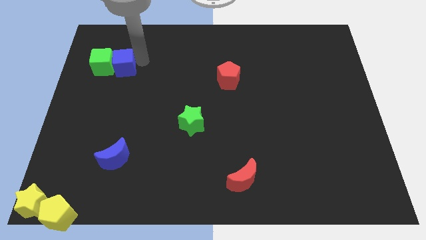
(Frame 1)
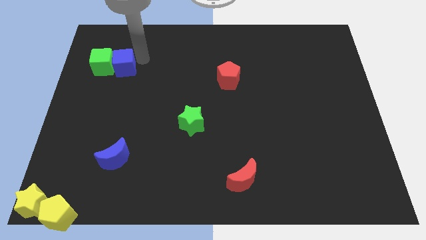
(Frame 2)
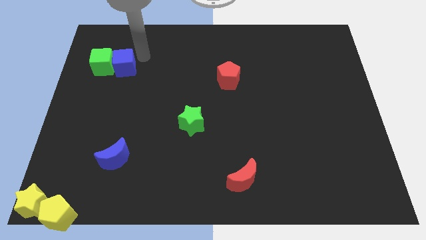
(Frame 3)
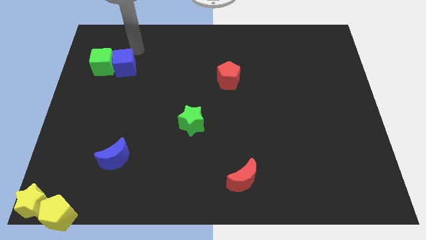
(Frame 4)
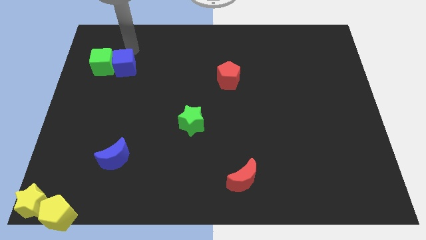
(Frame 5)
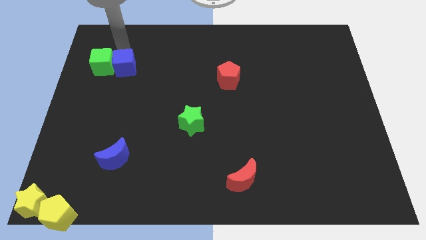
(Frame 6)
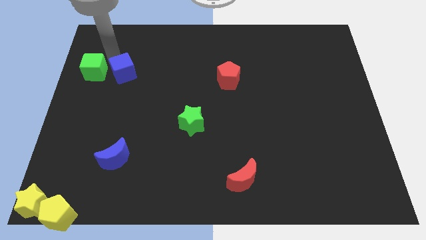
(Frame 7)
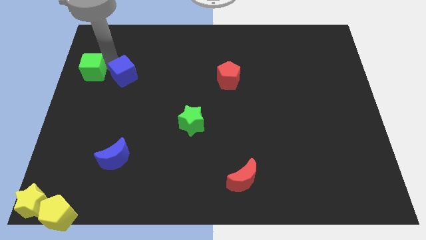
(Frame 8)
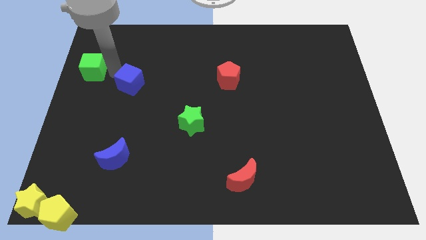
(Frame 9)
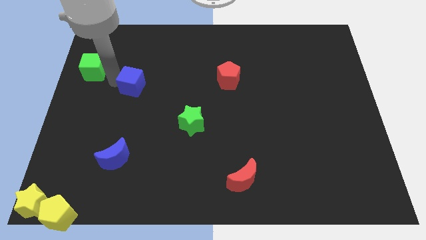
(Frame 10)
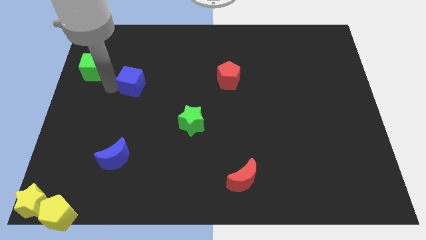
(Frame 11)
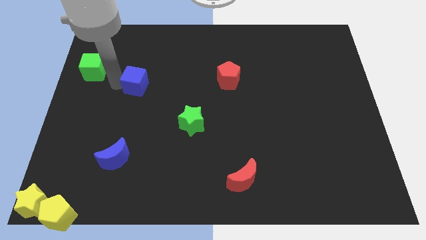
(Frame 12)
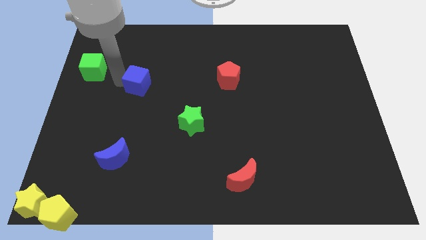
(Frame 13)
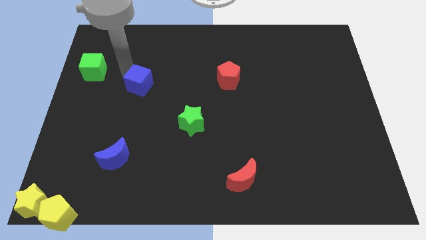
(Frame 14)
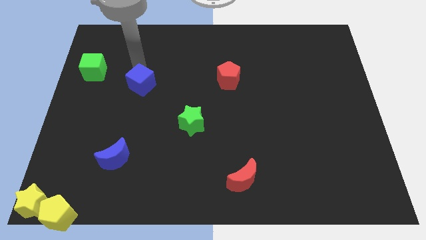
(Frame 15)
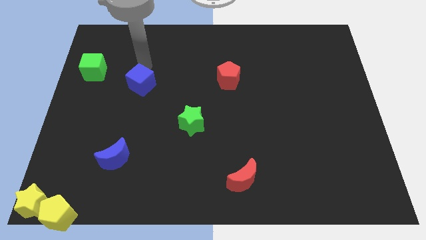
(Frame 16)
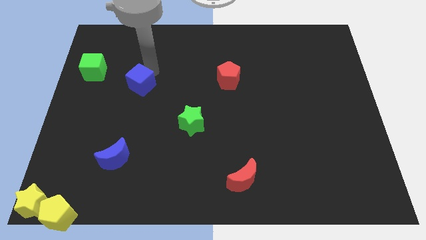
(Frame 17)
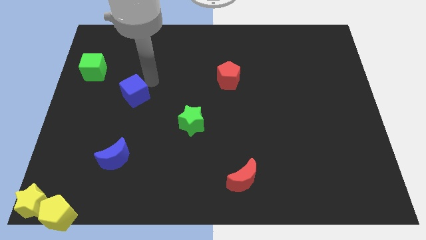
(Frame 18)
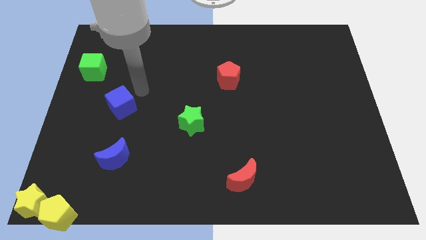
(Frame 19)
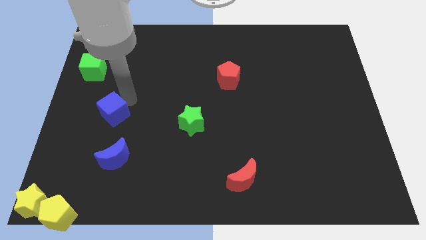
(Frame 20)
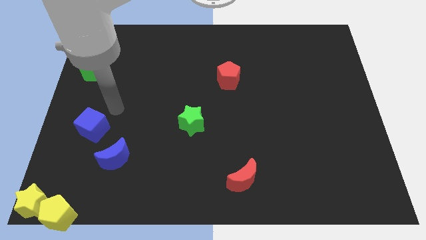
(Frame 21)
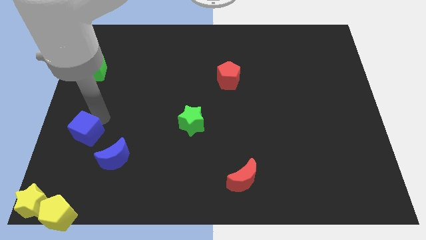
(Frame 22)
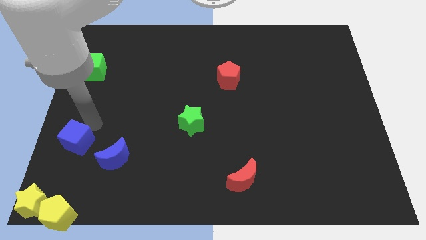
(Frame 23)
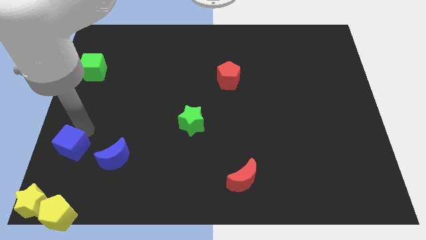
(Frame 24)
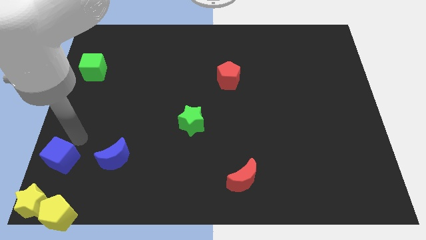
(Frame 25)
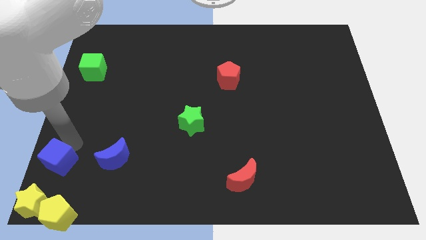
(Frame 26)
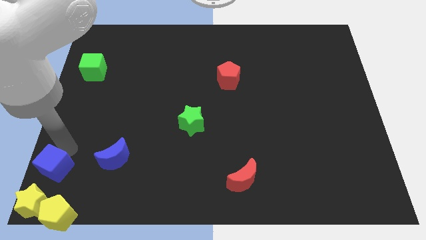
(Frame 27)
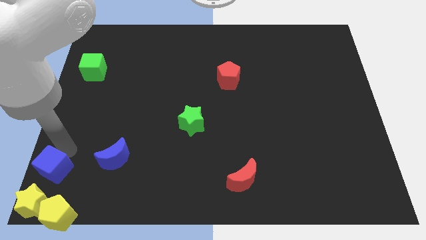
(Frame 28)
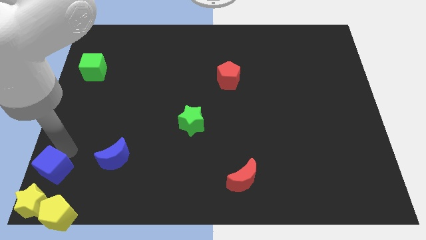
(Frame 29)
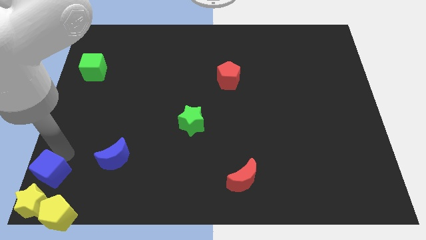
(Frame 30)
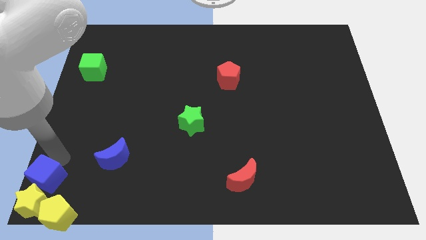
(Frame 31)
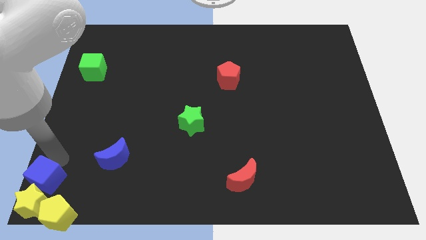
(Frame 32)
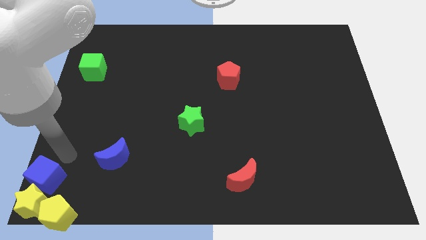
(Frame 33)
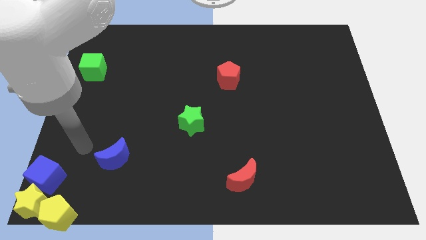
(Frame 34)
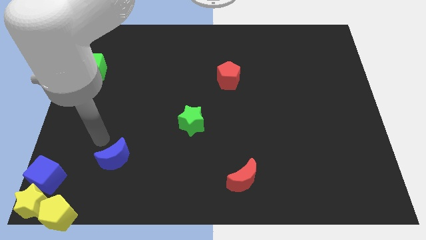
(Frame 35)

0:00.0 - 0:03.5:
place the blue cube above the yellow star

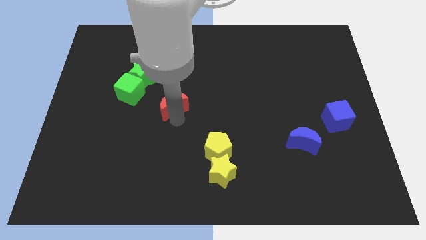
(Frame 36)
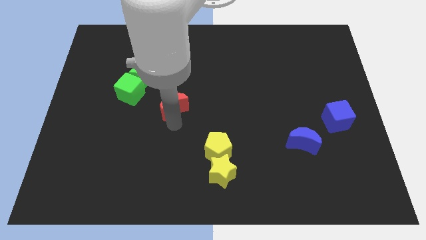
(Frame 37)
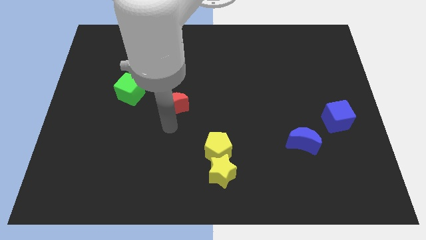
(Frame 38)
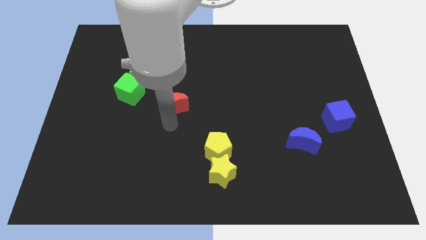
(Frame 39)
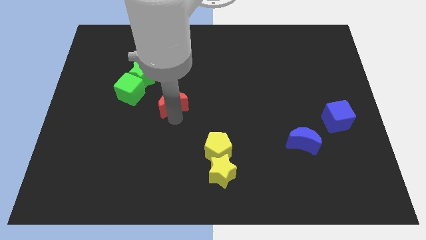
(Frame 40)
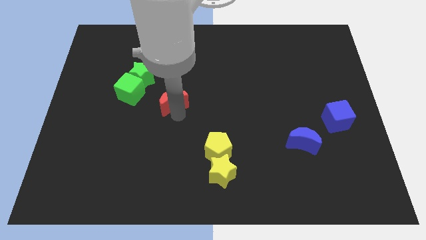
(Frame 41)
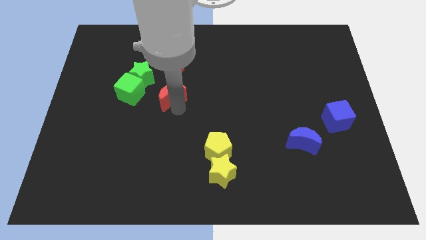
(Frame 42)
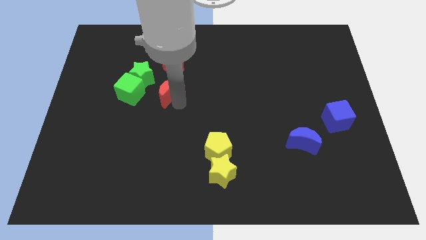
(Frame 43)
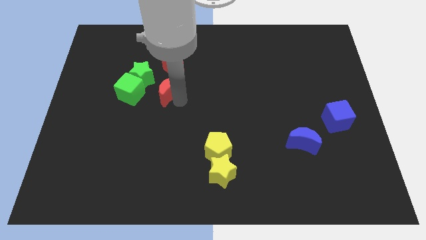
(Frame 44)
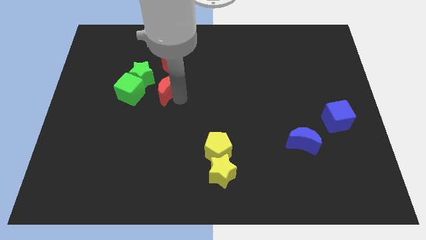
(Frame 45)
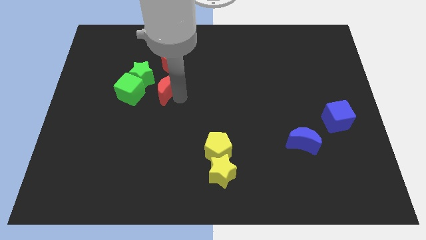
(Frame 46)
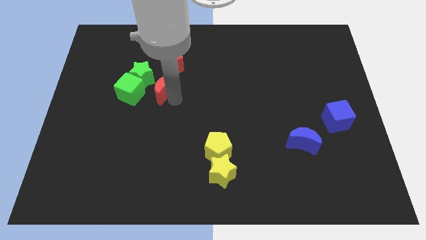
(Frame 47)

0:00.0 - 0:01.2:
push the red crescent towards the green star

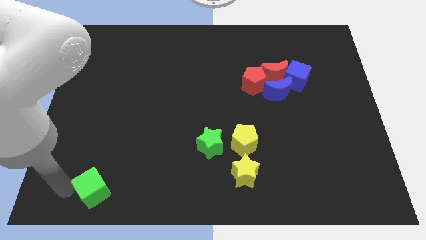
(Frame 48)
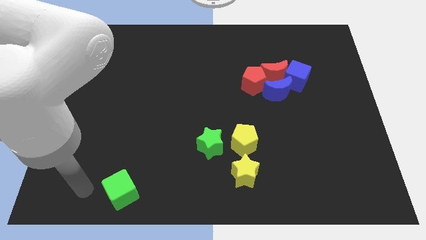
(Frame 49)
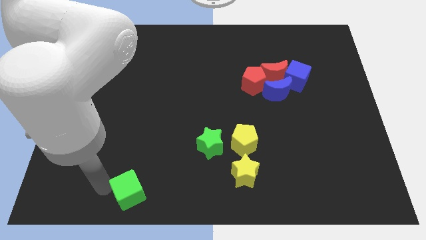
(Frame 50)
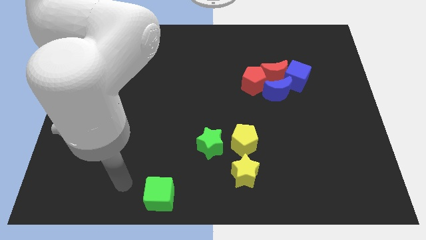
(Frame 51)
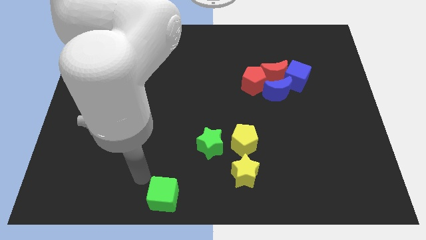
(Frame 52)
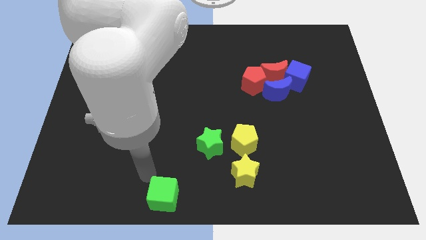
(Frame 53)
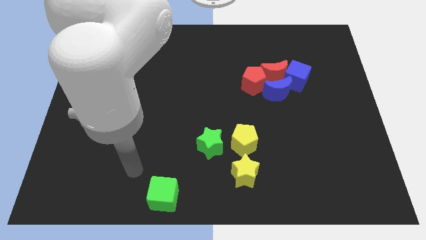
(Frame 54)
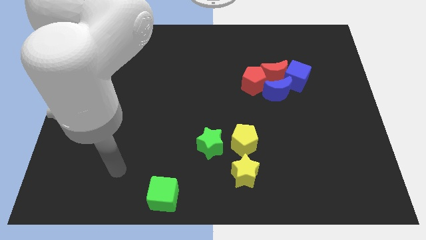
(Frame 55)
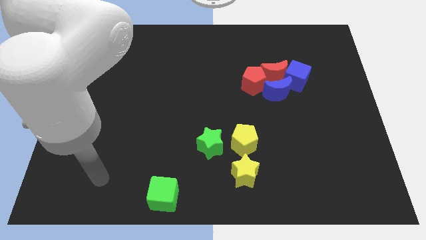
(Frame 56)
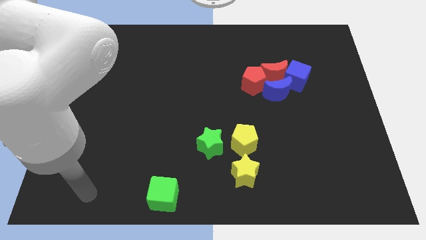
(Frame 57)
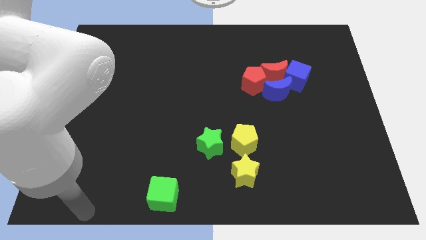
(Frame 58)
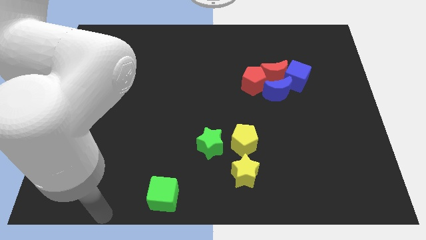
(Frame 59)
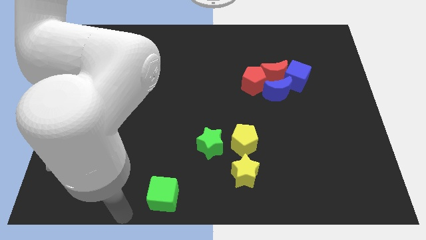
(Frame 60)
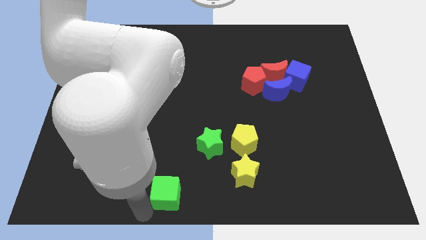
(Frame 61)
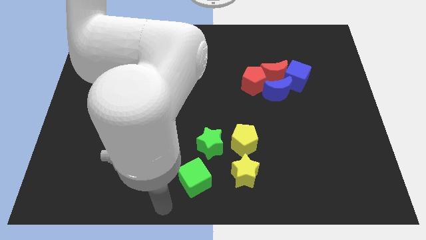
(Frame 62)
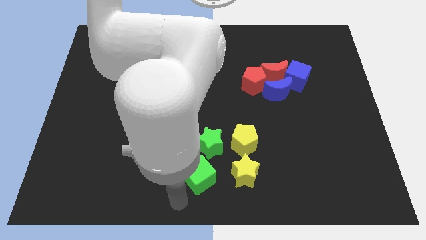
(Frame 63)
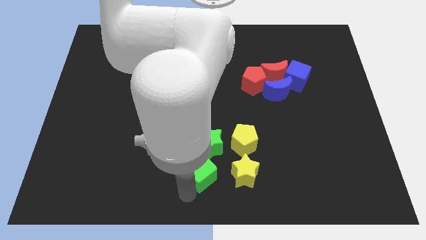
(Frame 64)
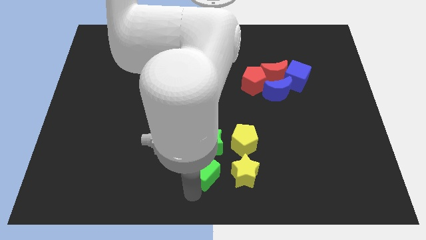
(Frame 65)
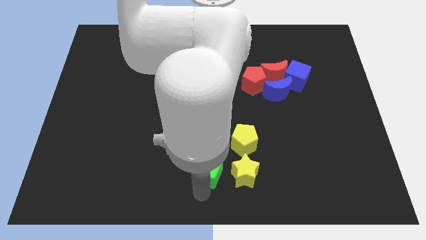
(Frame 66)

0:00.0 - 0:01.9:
push the green cube towards the yellow star

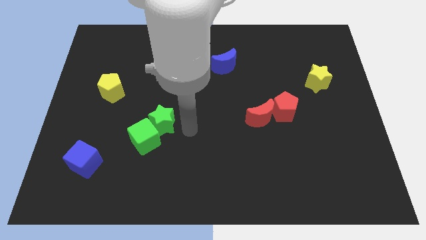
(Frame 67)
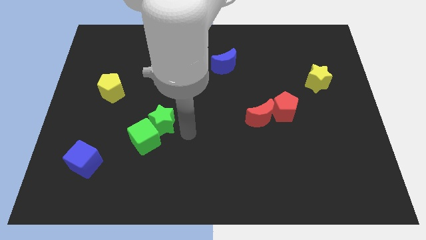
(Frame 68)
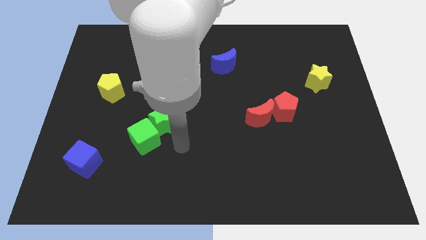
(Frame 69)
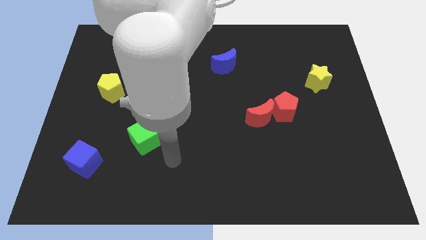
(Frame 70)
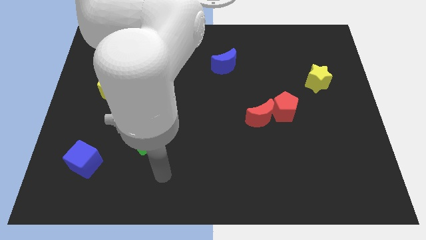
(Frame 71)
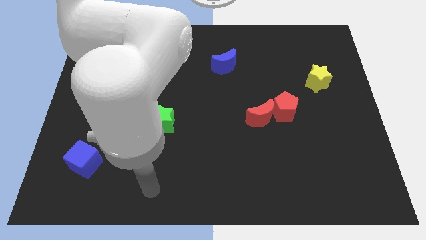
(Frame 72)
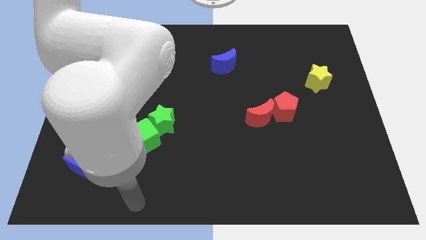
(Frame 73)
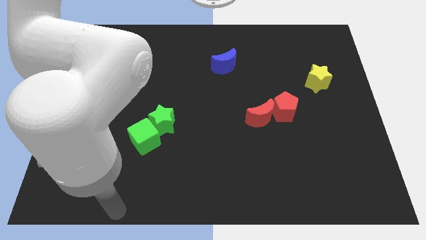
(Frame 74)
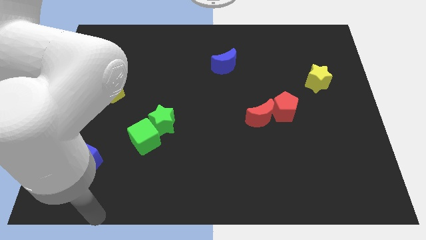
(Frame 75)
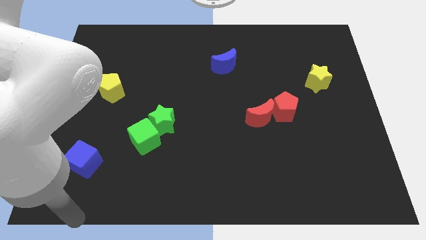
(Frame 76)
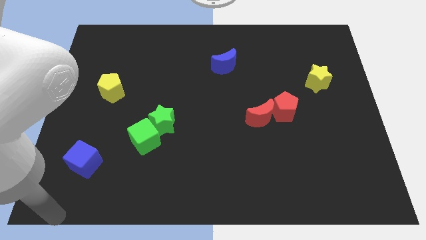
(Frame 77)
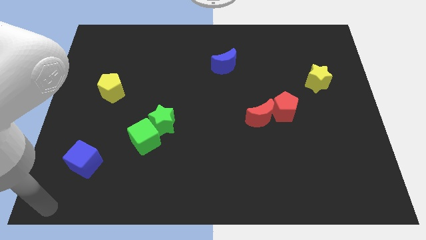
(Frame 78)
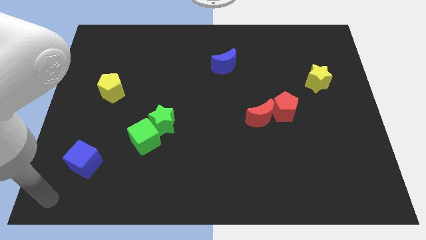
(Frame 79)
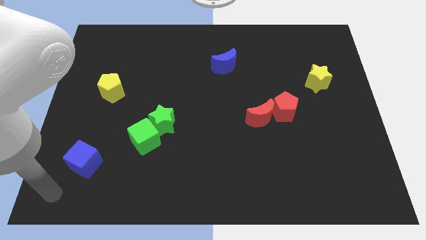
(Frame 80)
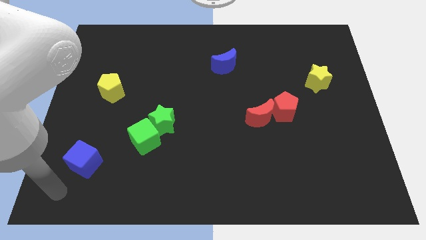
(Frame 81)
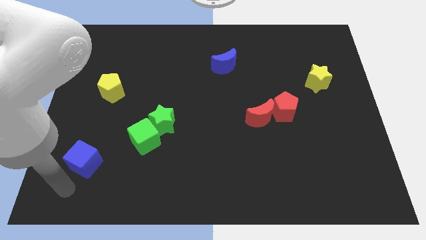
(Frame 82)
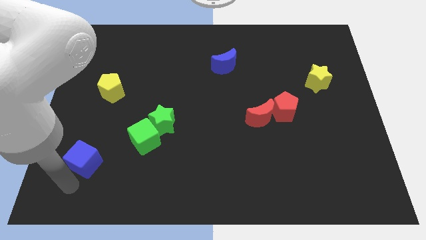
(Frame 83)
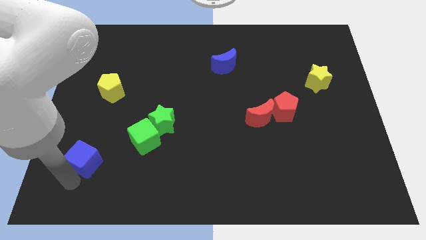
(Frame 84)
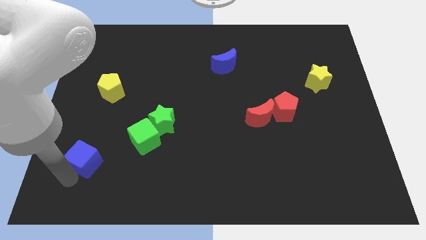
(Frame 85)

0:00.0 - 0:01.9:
move the arm towards the blue cube

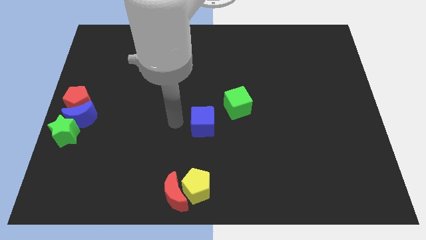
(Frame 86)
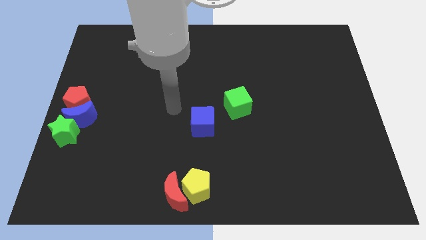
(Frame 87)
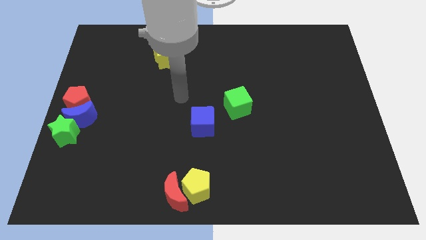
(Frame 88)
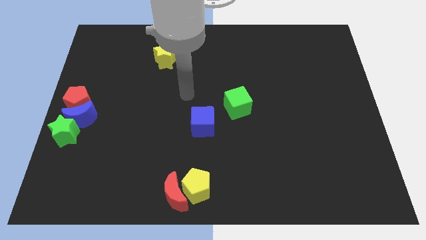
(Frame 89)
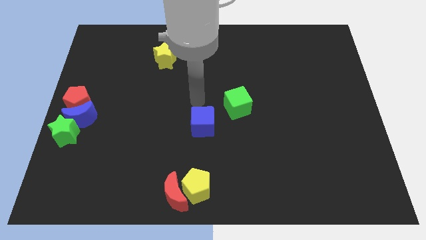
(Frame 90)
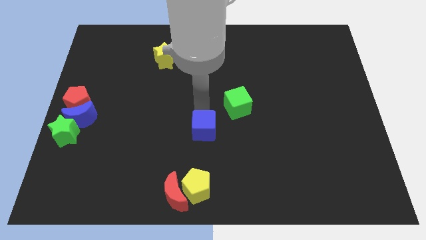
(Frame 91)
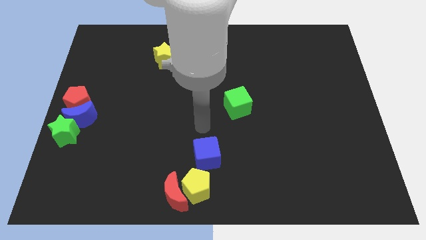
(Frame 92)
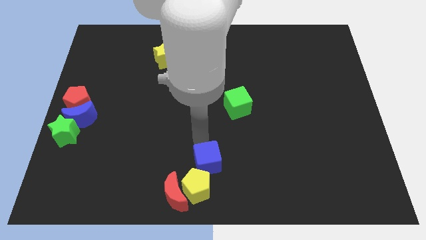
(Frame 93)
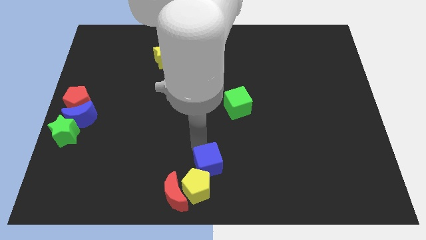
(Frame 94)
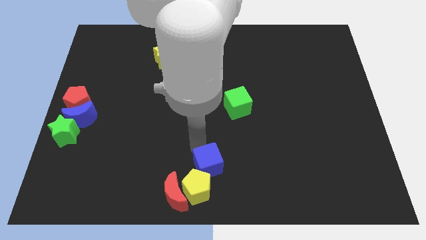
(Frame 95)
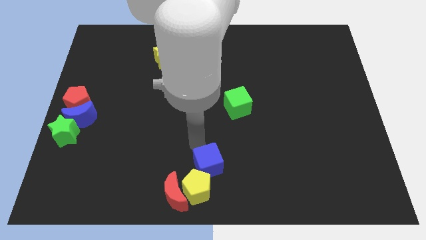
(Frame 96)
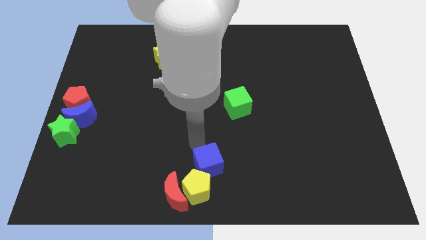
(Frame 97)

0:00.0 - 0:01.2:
place the blue cube above the yellow pentagon
